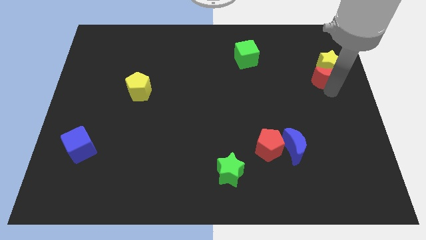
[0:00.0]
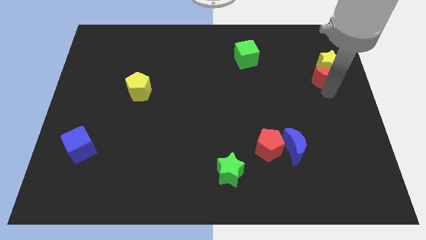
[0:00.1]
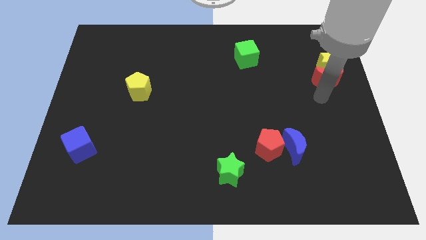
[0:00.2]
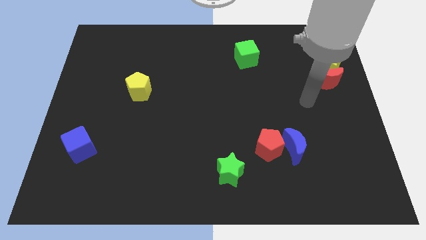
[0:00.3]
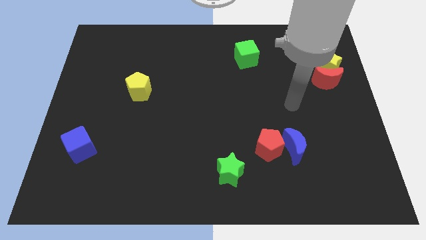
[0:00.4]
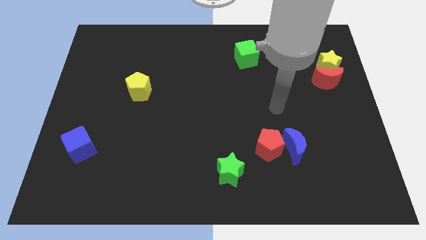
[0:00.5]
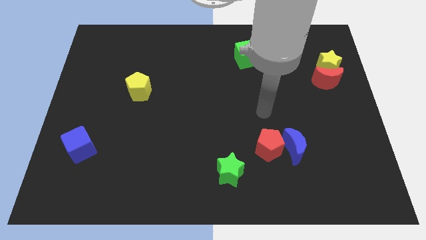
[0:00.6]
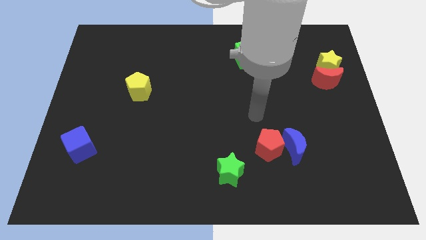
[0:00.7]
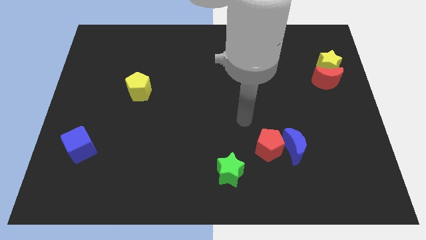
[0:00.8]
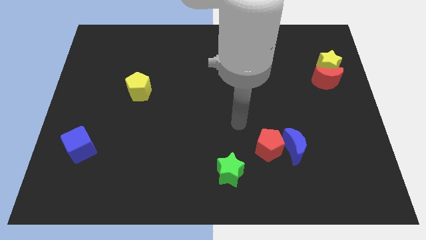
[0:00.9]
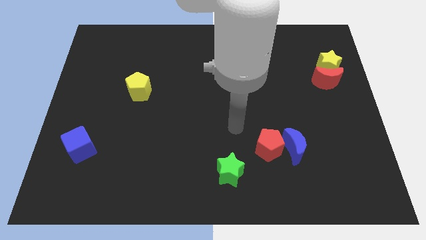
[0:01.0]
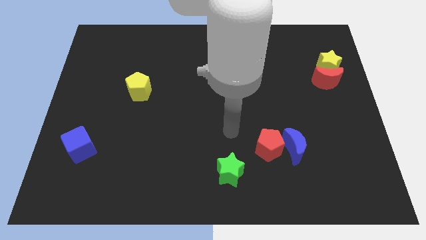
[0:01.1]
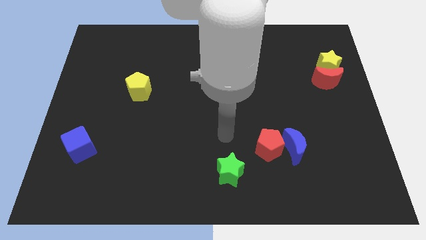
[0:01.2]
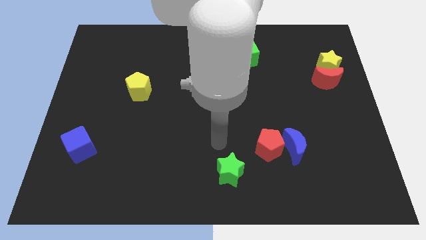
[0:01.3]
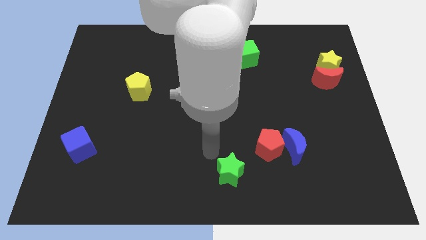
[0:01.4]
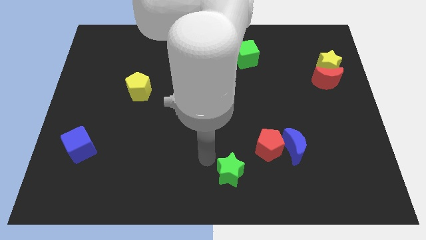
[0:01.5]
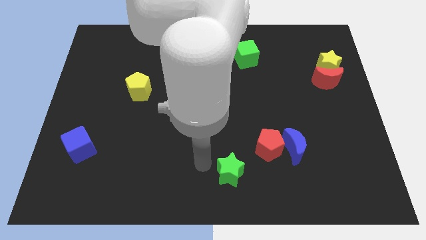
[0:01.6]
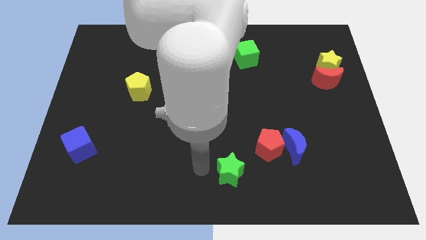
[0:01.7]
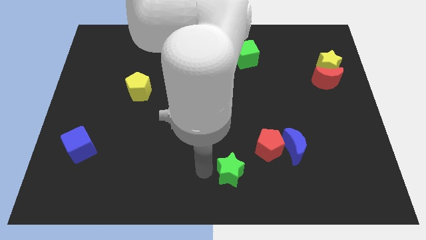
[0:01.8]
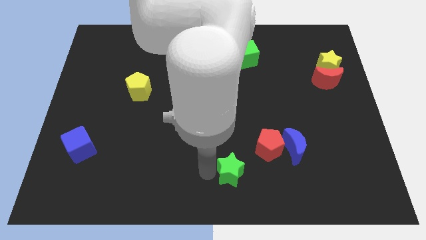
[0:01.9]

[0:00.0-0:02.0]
place the arm to the left of the green star

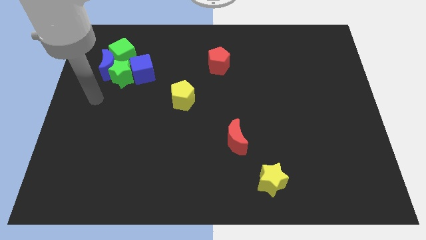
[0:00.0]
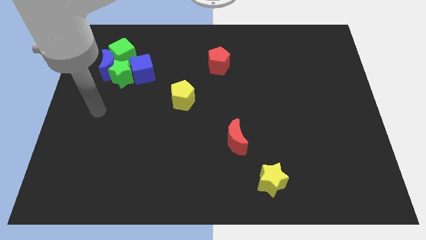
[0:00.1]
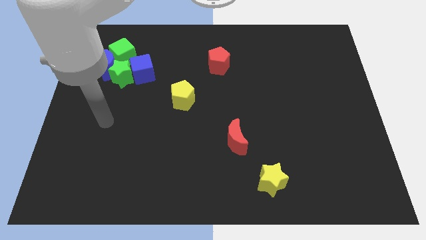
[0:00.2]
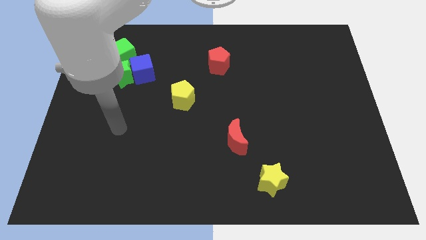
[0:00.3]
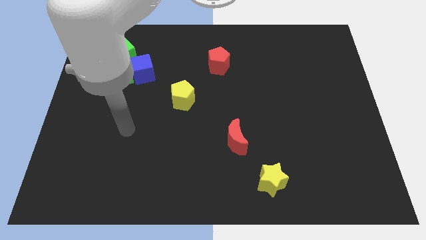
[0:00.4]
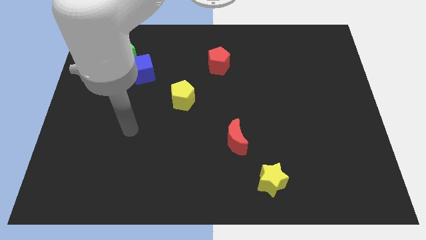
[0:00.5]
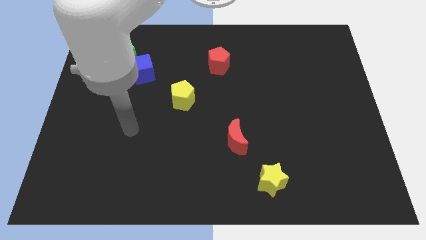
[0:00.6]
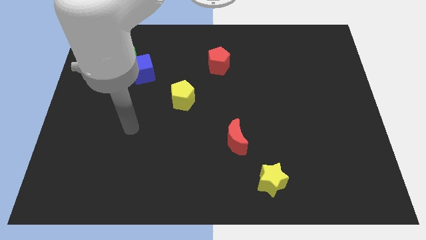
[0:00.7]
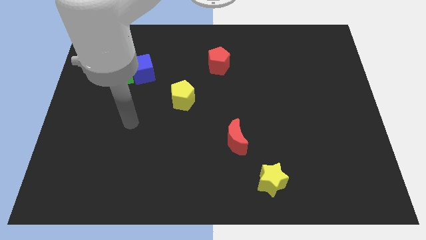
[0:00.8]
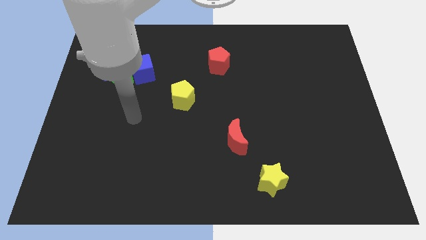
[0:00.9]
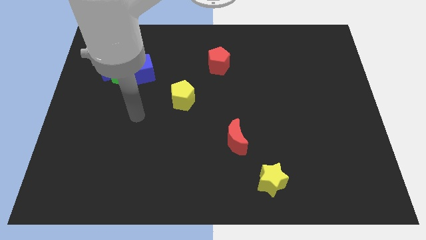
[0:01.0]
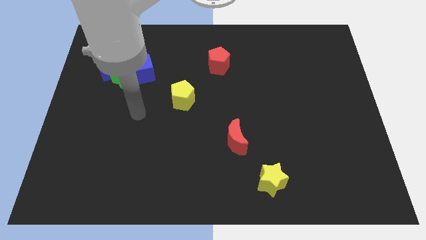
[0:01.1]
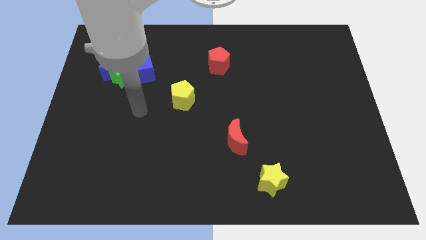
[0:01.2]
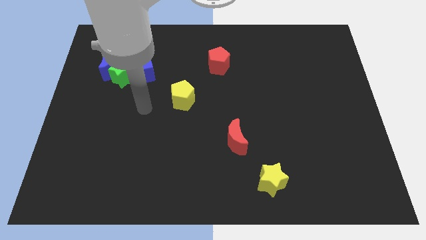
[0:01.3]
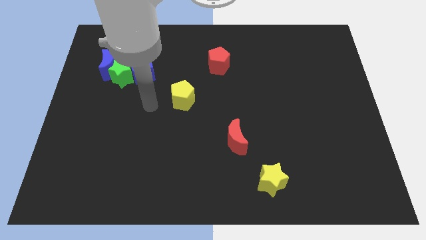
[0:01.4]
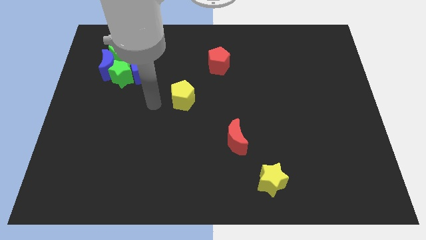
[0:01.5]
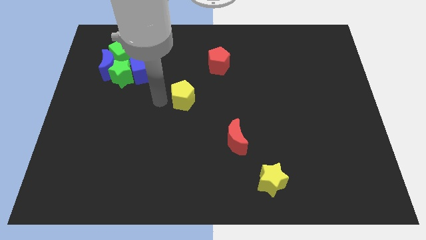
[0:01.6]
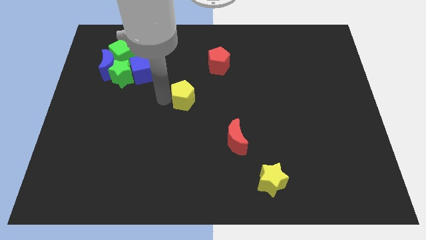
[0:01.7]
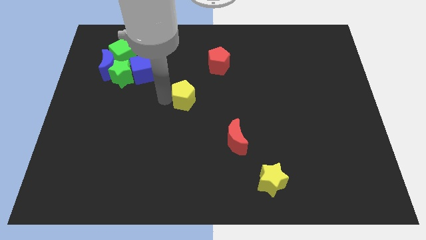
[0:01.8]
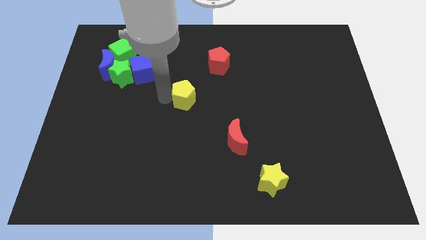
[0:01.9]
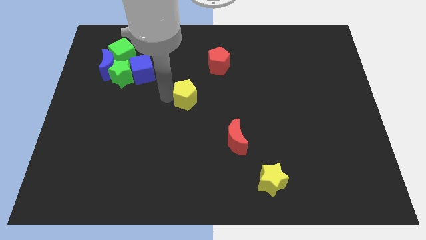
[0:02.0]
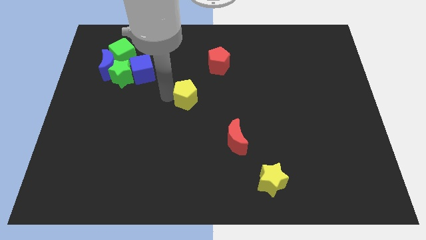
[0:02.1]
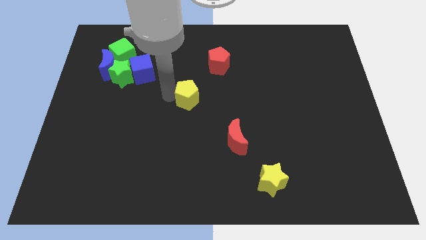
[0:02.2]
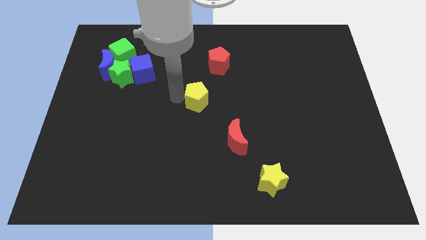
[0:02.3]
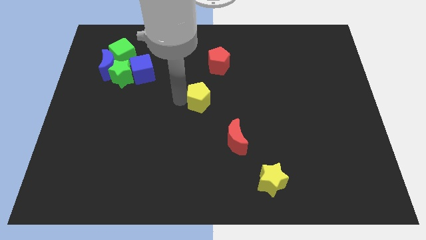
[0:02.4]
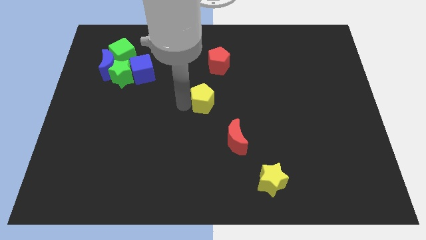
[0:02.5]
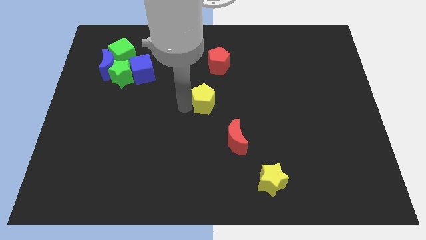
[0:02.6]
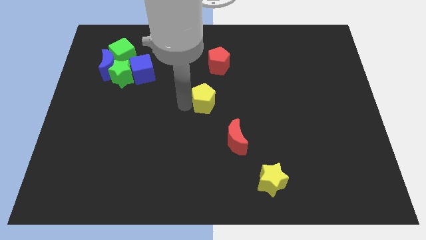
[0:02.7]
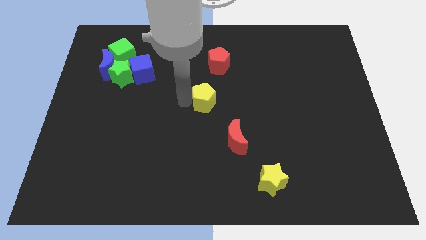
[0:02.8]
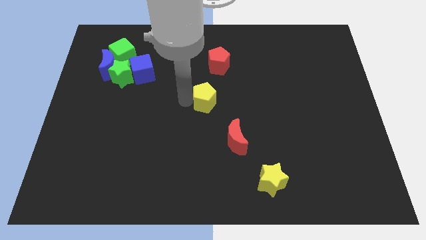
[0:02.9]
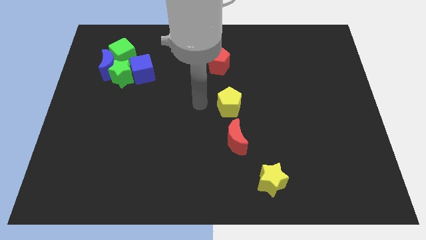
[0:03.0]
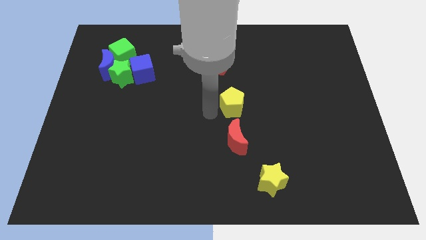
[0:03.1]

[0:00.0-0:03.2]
place the yellow pentagon in between red pentagon and red moon

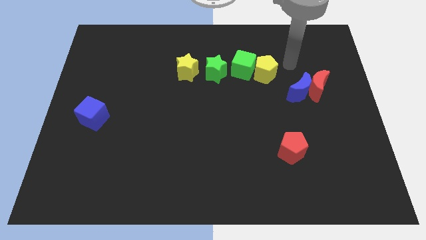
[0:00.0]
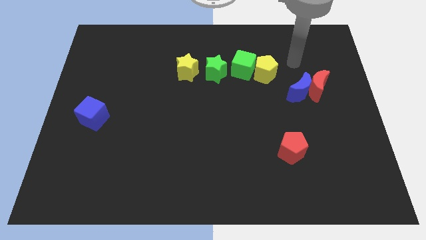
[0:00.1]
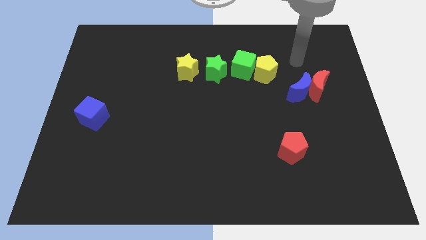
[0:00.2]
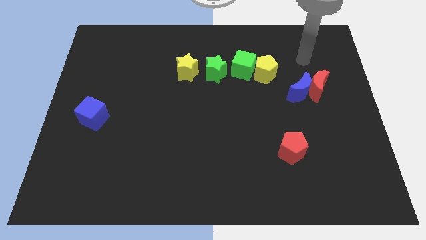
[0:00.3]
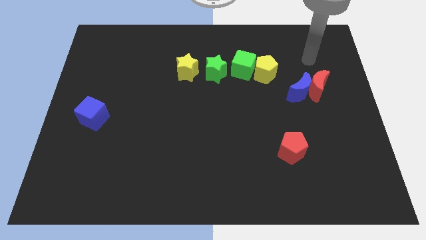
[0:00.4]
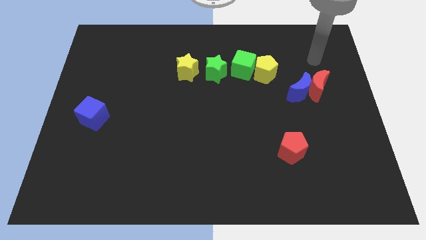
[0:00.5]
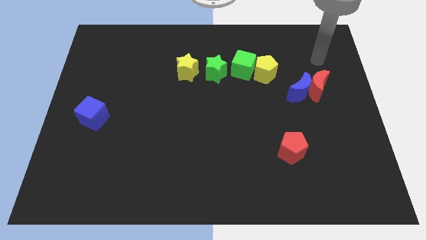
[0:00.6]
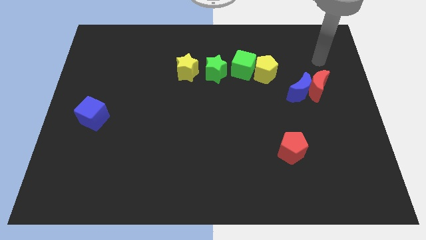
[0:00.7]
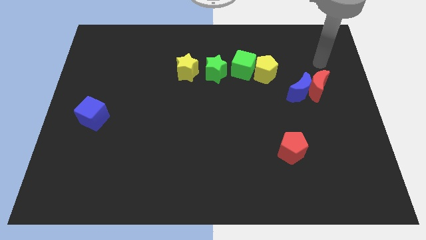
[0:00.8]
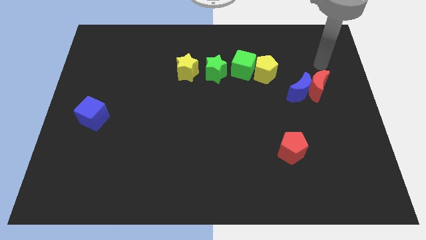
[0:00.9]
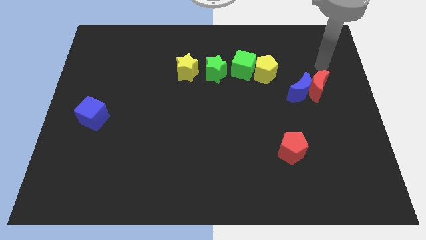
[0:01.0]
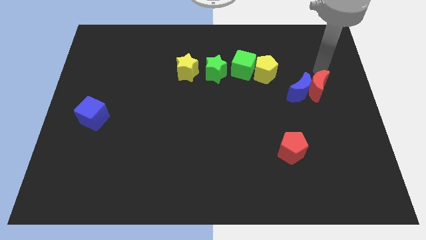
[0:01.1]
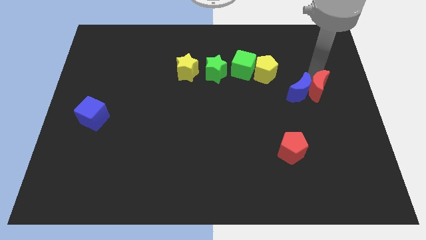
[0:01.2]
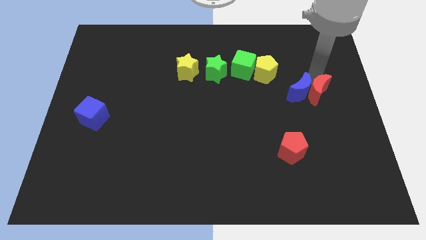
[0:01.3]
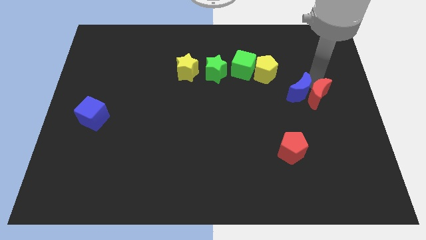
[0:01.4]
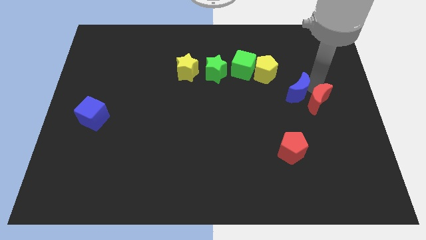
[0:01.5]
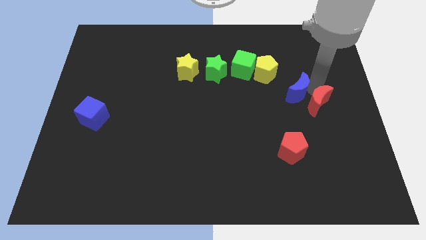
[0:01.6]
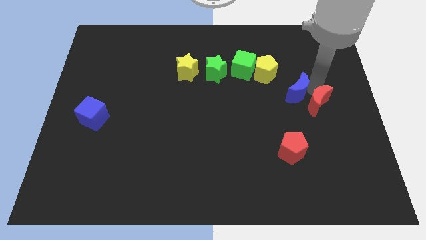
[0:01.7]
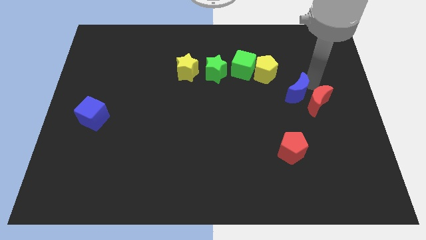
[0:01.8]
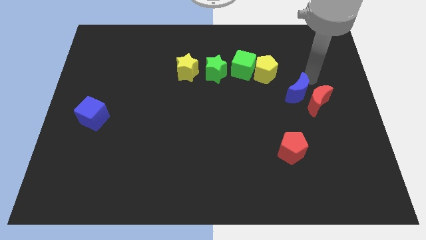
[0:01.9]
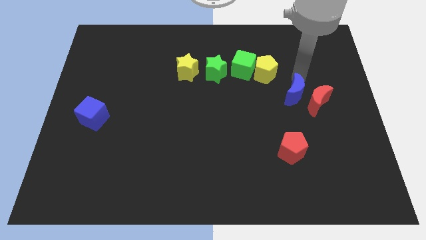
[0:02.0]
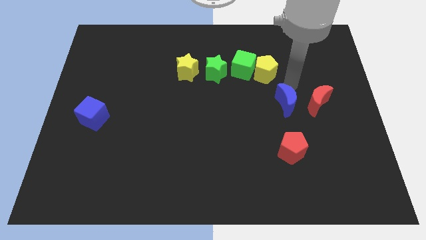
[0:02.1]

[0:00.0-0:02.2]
separate the blue moon and red moon

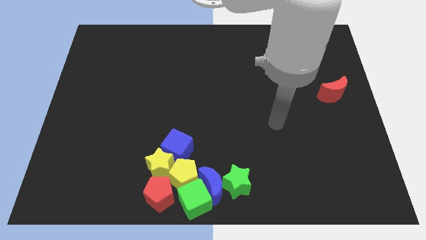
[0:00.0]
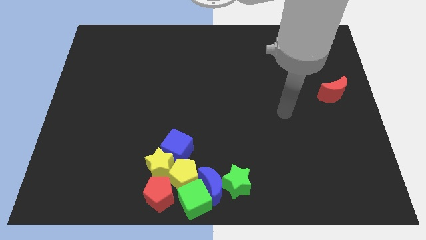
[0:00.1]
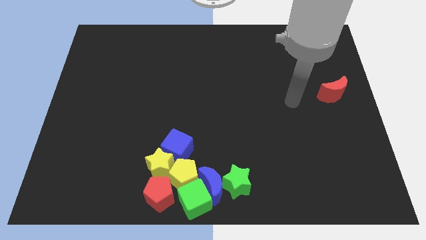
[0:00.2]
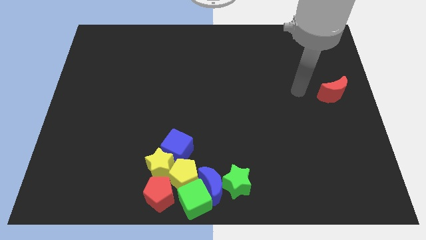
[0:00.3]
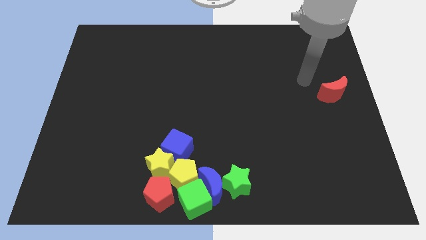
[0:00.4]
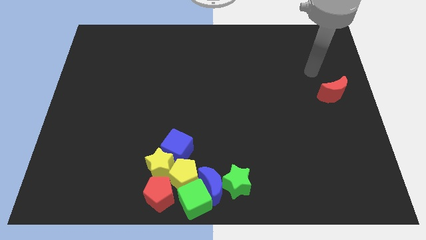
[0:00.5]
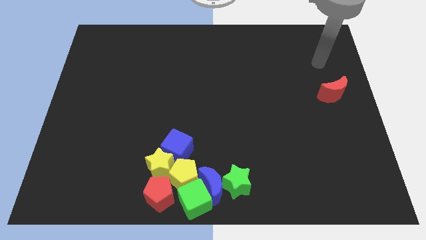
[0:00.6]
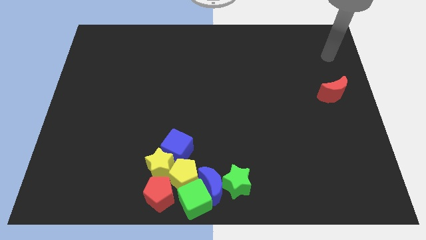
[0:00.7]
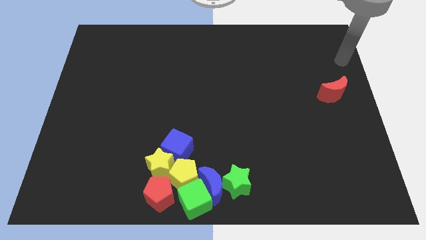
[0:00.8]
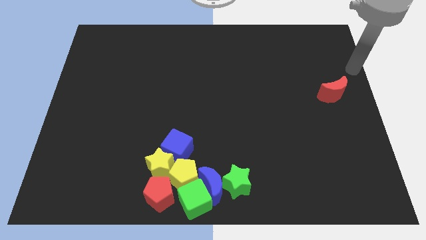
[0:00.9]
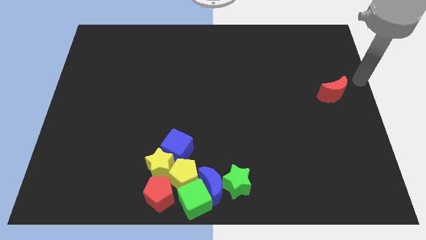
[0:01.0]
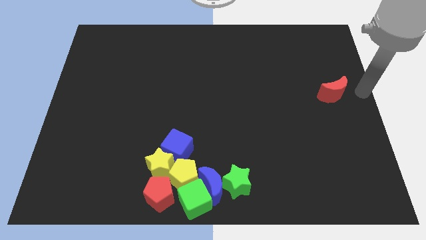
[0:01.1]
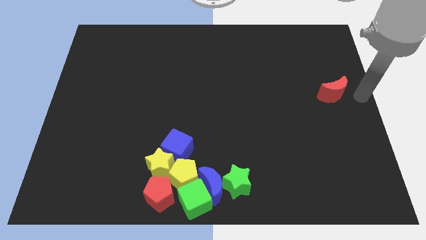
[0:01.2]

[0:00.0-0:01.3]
place arm to the right of the red moon

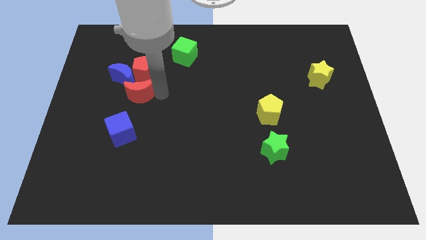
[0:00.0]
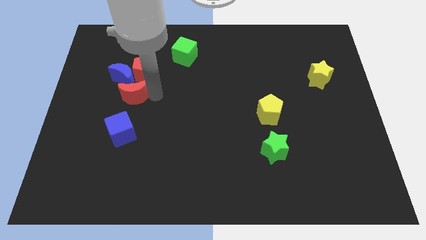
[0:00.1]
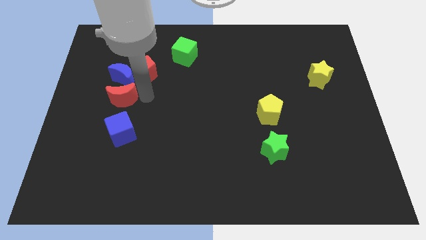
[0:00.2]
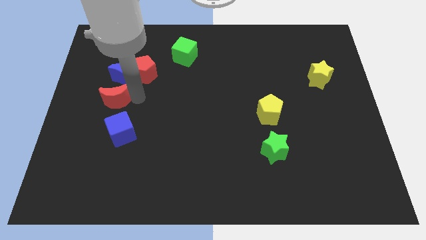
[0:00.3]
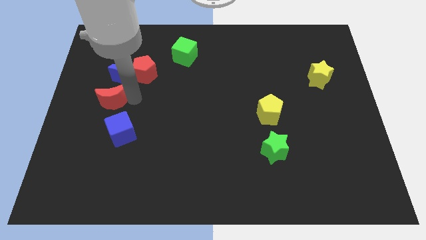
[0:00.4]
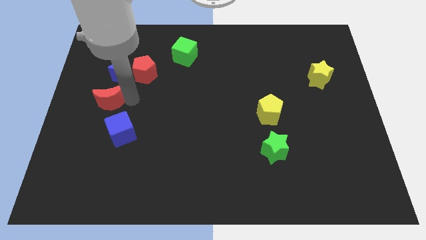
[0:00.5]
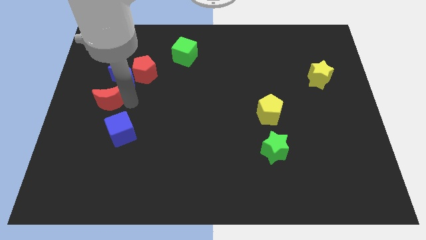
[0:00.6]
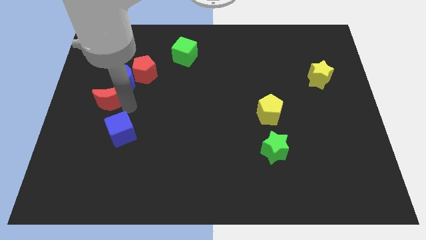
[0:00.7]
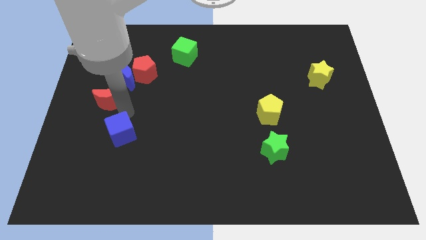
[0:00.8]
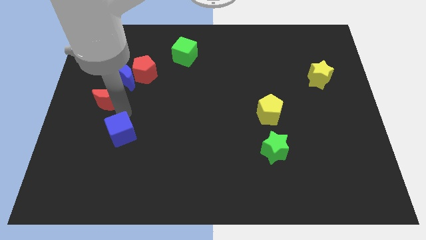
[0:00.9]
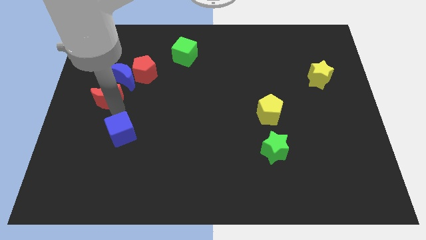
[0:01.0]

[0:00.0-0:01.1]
place red moon below the blue moon
